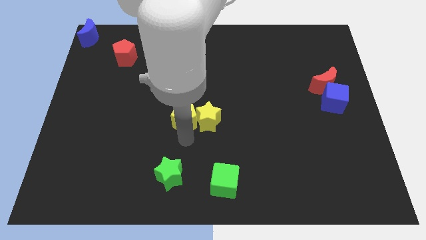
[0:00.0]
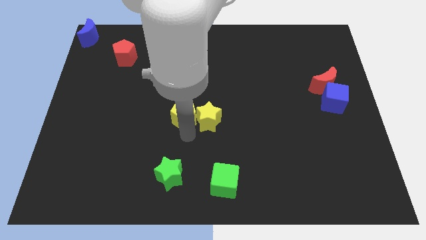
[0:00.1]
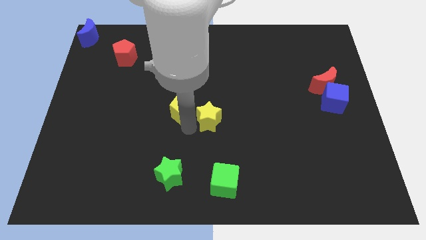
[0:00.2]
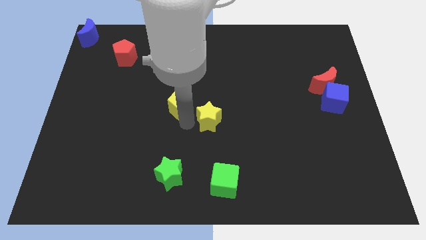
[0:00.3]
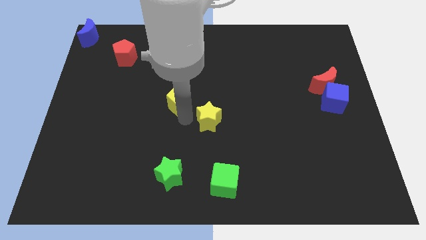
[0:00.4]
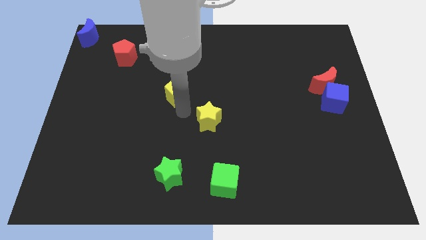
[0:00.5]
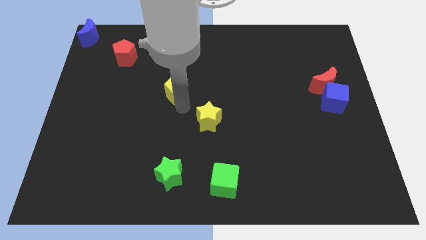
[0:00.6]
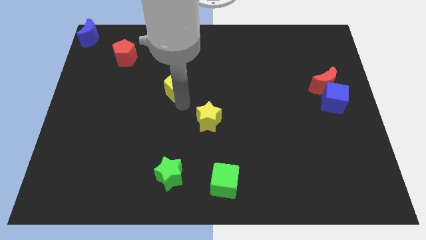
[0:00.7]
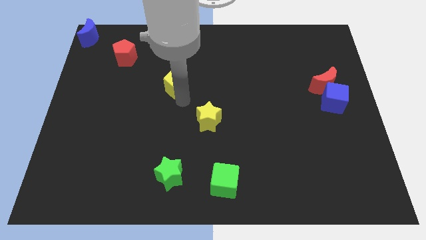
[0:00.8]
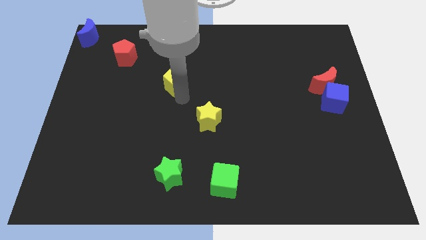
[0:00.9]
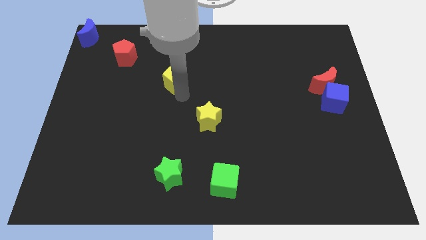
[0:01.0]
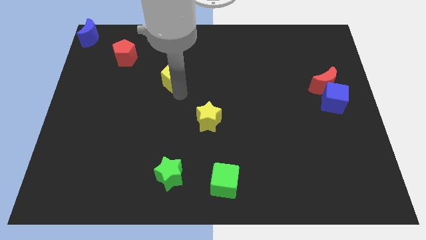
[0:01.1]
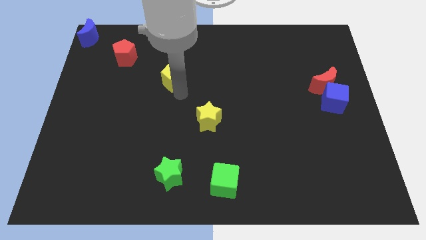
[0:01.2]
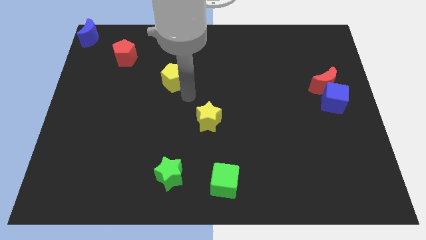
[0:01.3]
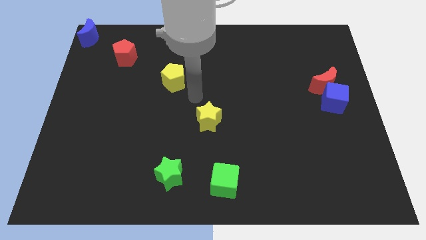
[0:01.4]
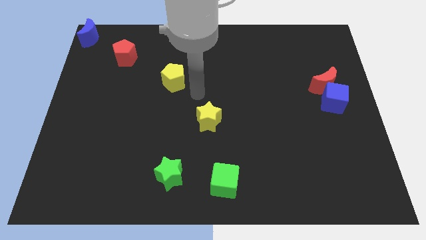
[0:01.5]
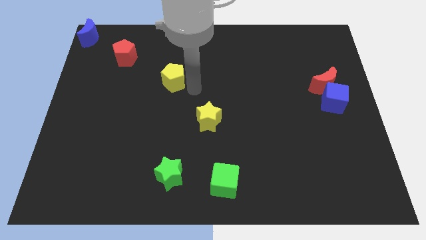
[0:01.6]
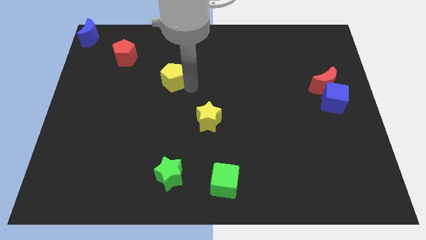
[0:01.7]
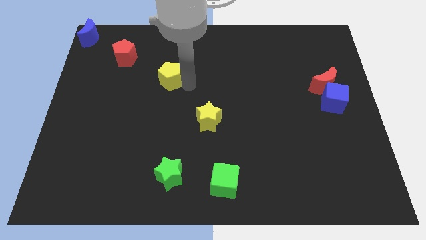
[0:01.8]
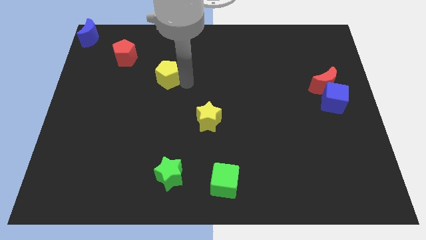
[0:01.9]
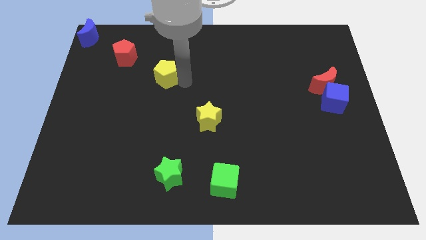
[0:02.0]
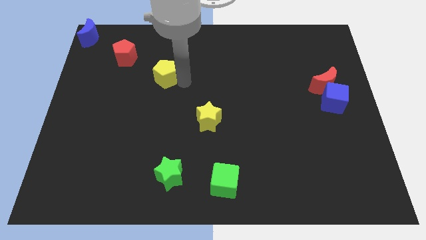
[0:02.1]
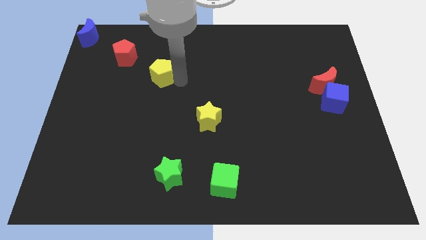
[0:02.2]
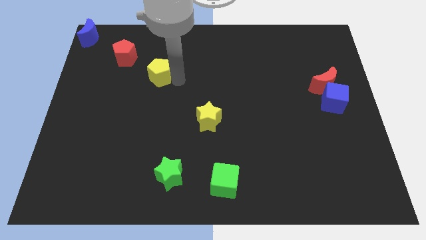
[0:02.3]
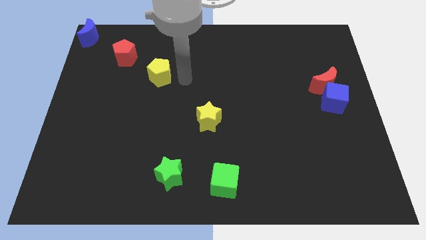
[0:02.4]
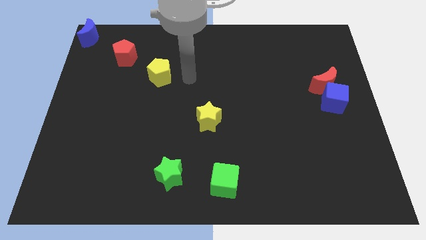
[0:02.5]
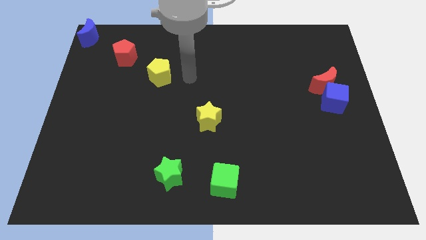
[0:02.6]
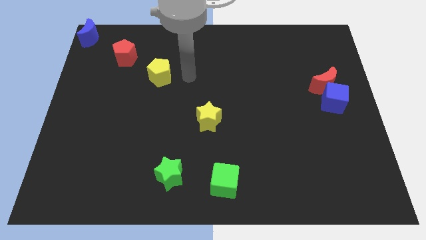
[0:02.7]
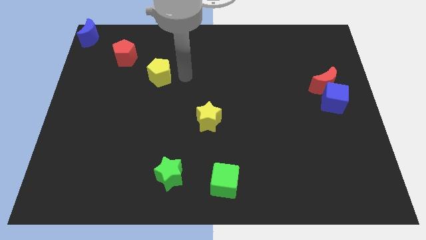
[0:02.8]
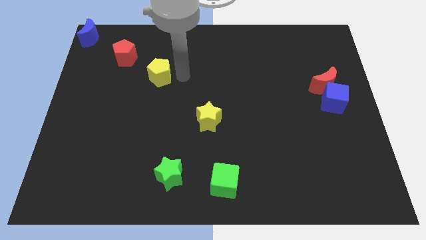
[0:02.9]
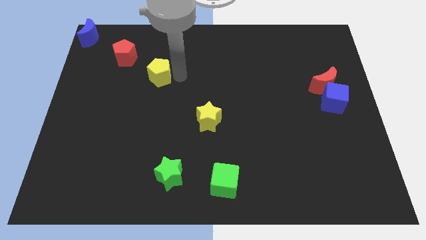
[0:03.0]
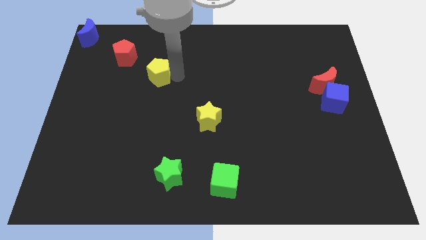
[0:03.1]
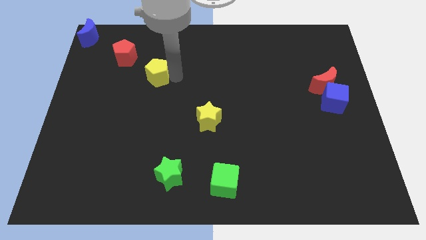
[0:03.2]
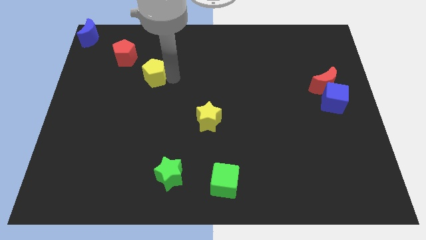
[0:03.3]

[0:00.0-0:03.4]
push yellow pentagon diagonally upwards

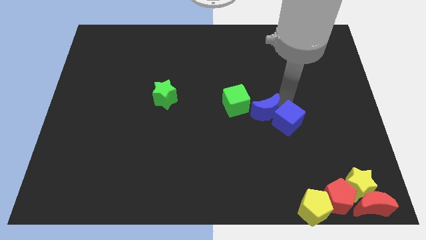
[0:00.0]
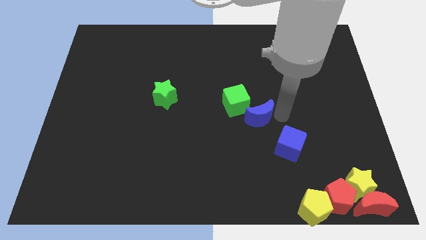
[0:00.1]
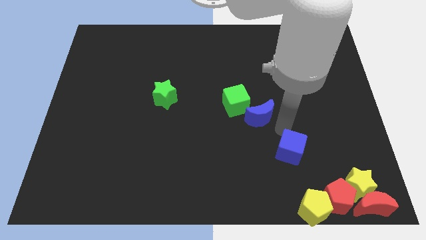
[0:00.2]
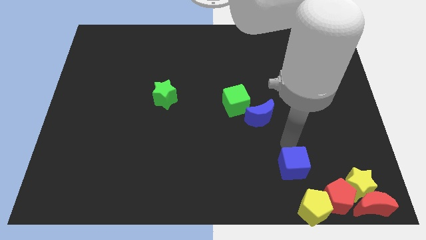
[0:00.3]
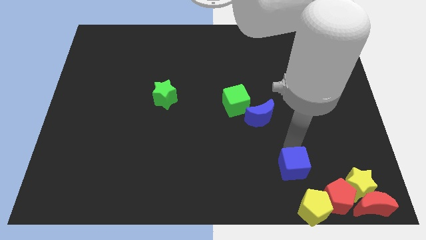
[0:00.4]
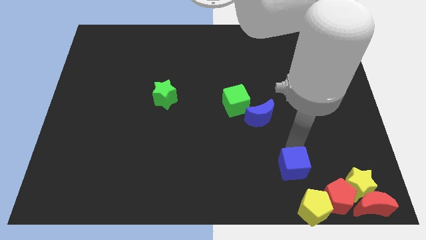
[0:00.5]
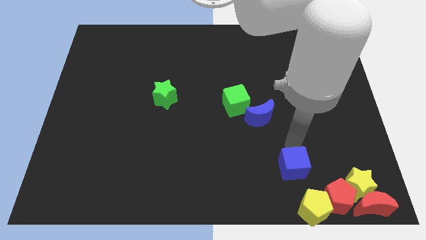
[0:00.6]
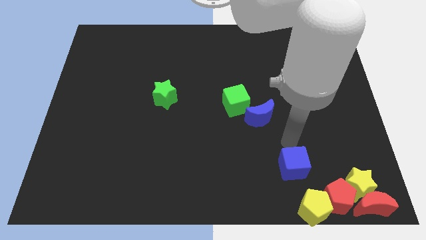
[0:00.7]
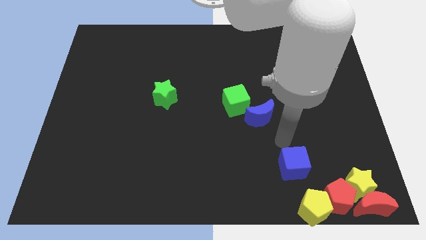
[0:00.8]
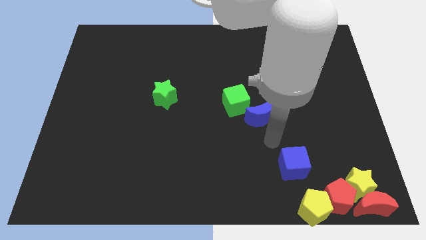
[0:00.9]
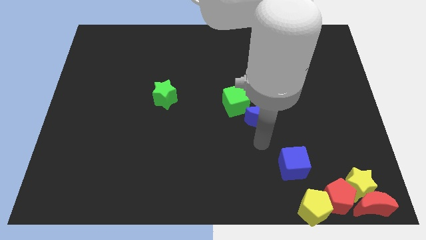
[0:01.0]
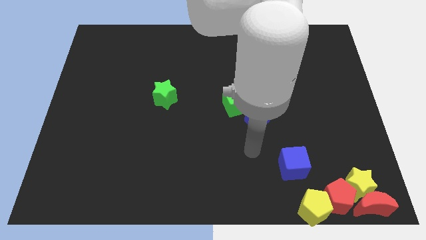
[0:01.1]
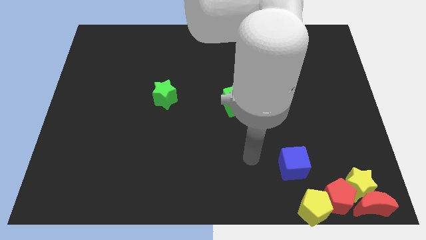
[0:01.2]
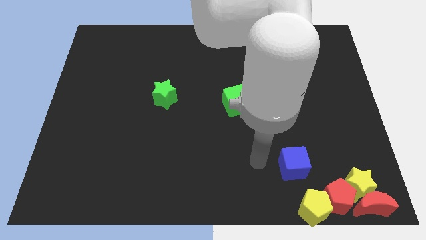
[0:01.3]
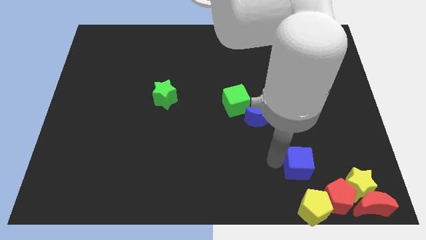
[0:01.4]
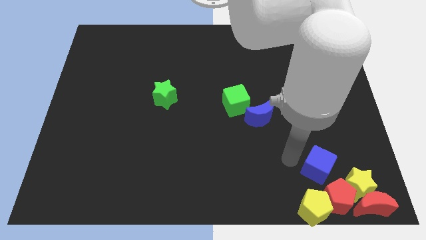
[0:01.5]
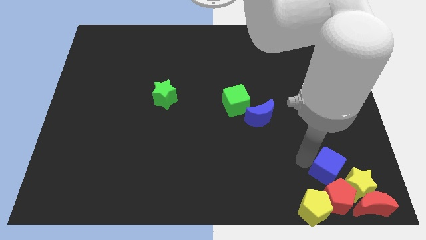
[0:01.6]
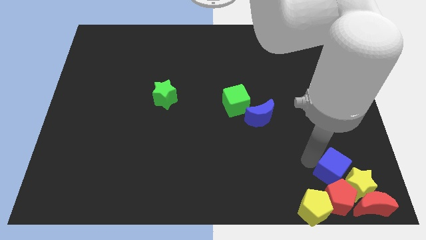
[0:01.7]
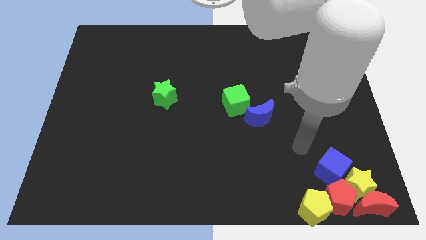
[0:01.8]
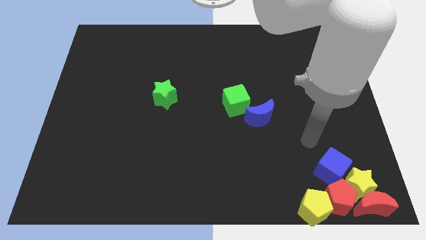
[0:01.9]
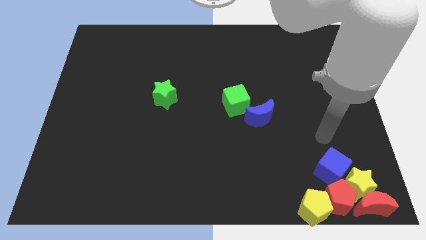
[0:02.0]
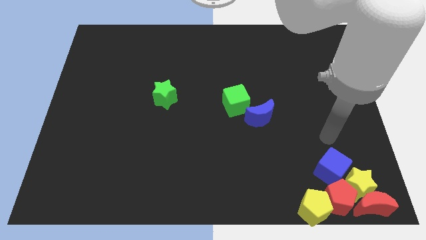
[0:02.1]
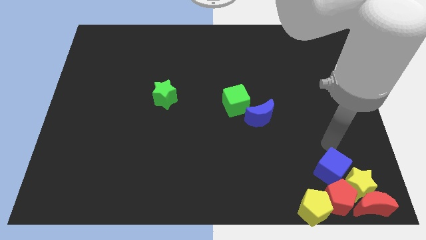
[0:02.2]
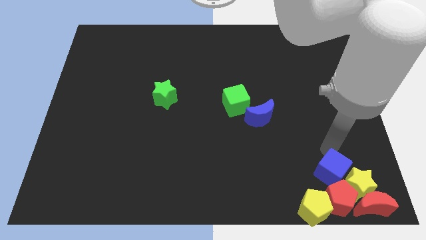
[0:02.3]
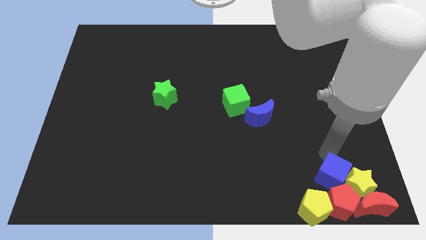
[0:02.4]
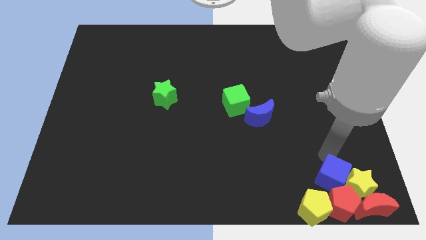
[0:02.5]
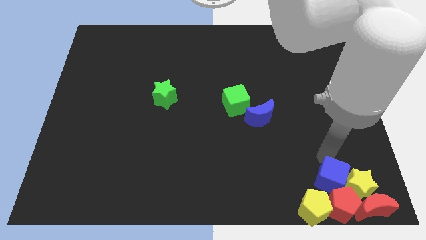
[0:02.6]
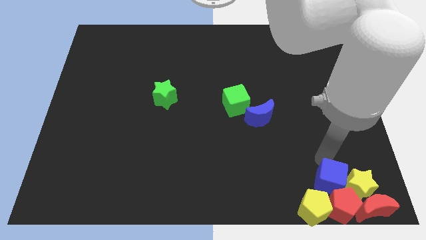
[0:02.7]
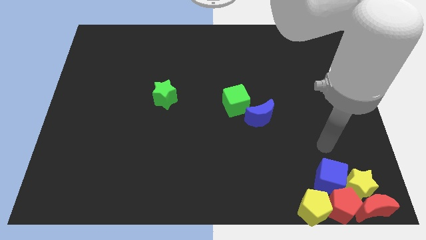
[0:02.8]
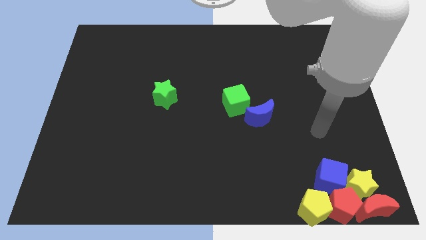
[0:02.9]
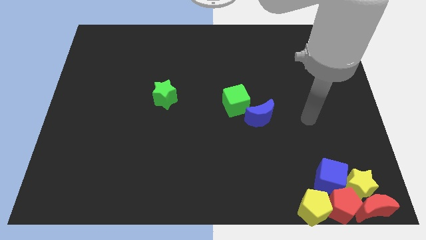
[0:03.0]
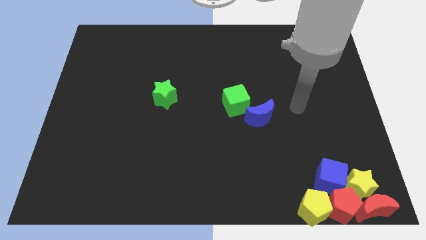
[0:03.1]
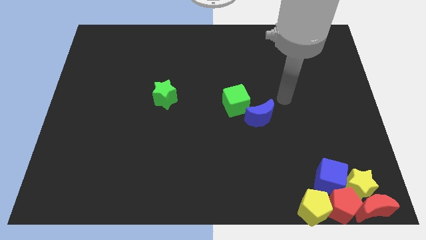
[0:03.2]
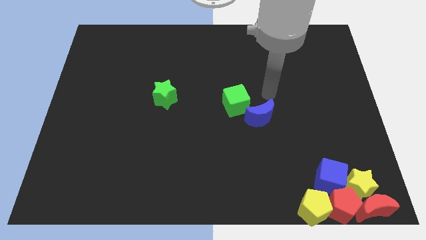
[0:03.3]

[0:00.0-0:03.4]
move the blue cube into the red pentagon

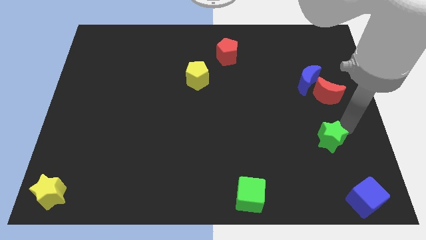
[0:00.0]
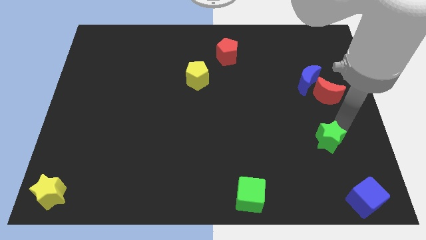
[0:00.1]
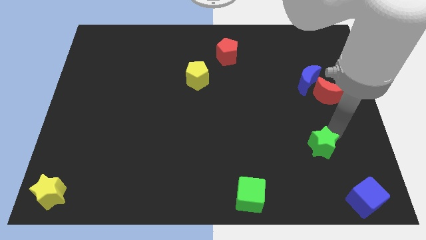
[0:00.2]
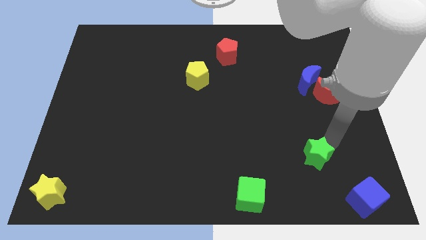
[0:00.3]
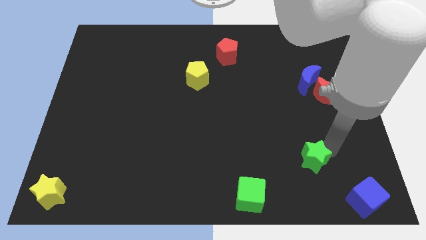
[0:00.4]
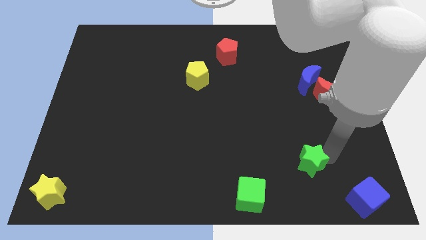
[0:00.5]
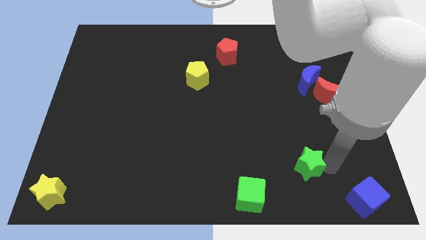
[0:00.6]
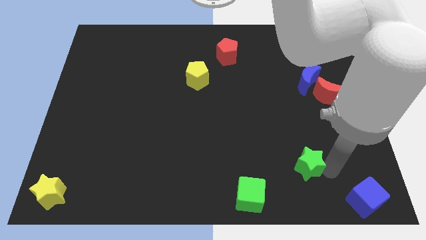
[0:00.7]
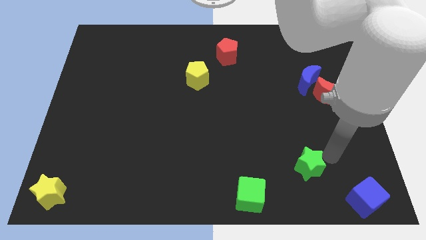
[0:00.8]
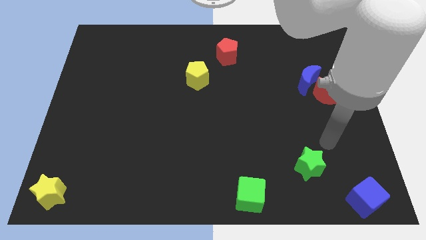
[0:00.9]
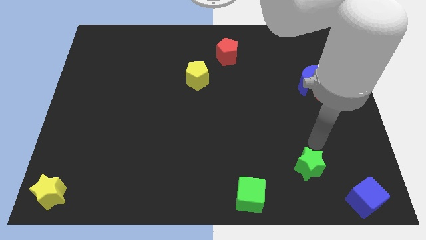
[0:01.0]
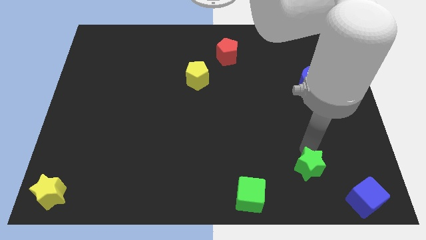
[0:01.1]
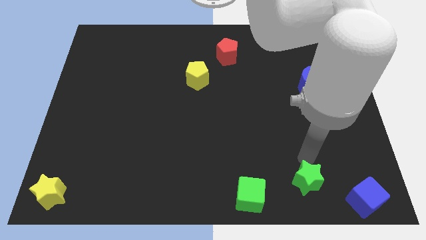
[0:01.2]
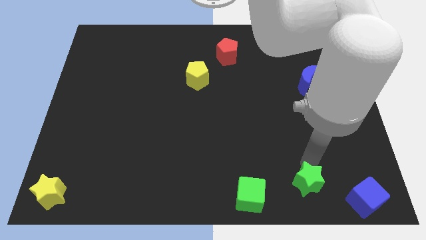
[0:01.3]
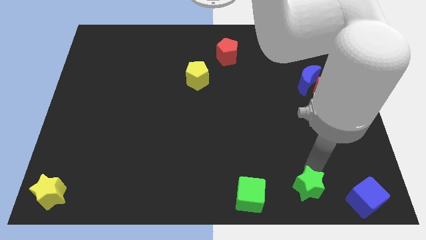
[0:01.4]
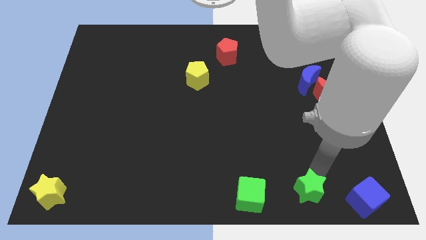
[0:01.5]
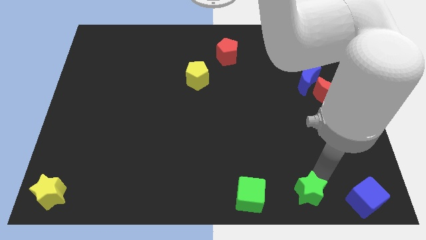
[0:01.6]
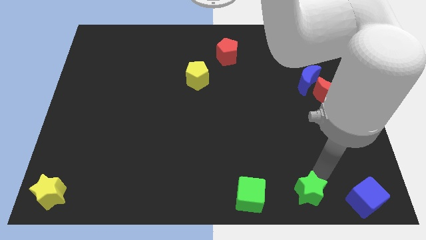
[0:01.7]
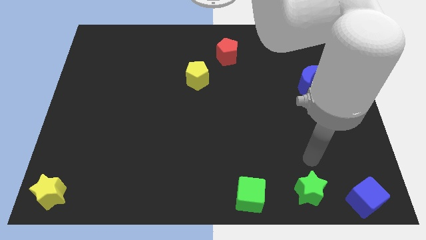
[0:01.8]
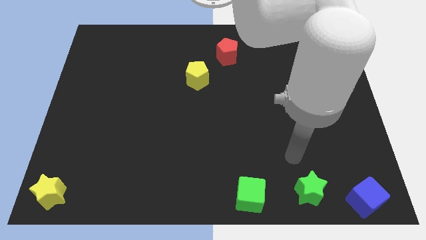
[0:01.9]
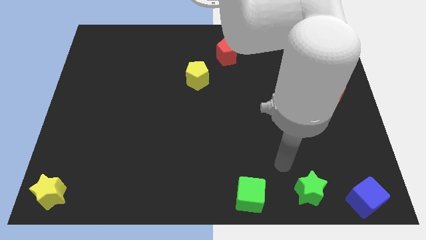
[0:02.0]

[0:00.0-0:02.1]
place the green star in between the blue cube and the green cube
